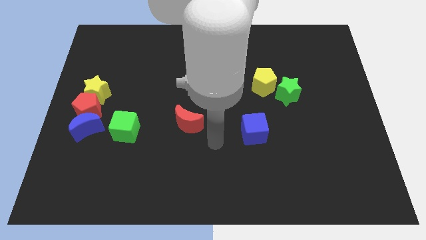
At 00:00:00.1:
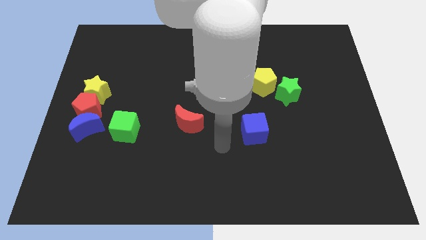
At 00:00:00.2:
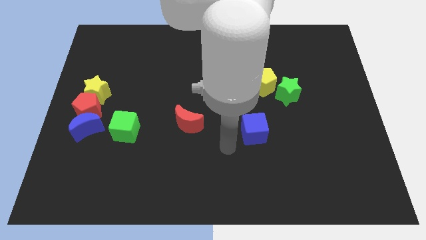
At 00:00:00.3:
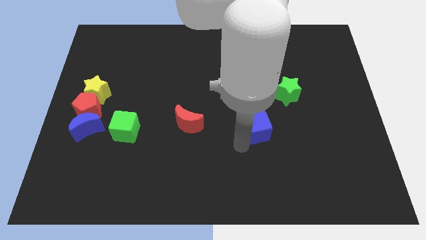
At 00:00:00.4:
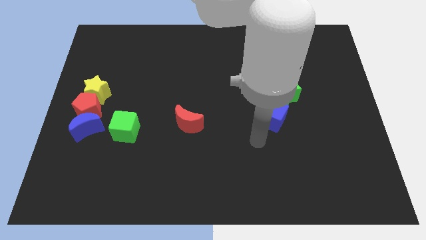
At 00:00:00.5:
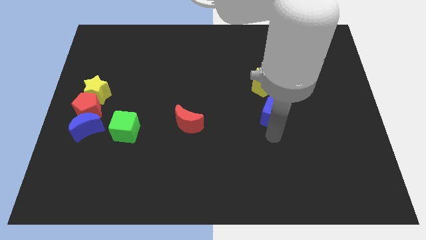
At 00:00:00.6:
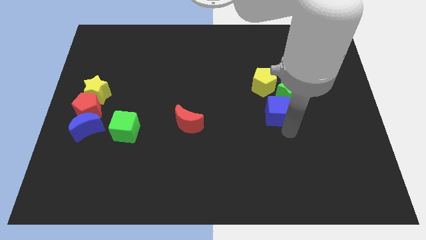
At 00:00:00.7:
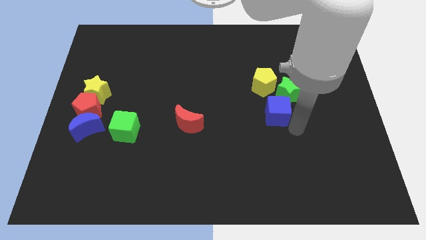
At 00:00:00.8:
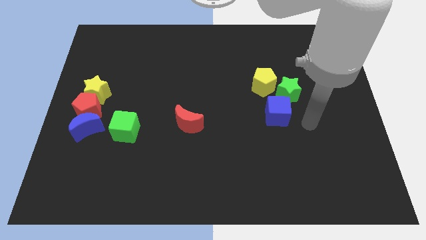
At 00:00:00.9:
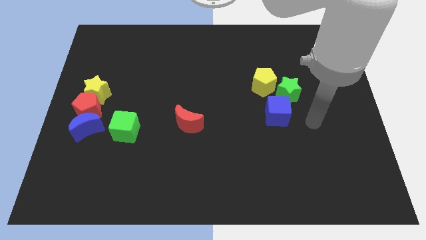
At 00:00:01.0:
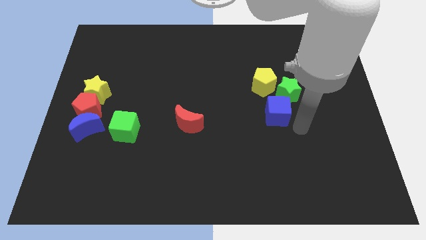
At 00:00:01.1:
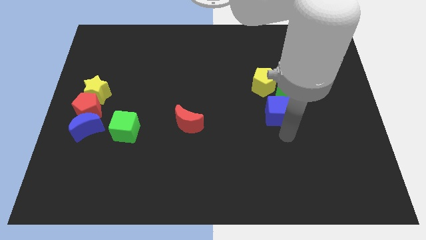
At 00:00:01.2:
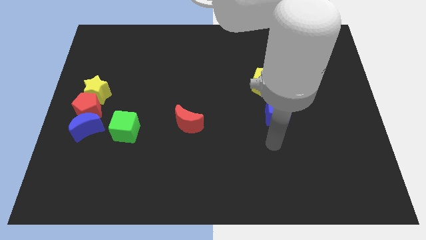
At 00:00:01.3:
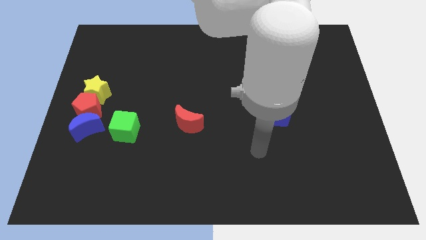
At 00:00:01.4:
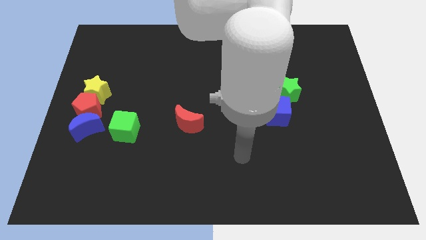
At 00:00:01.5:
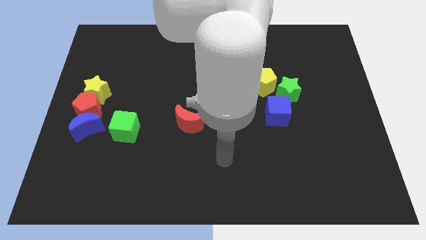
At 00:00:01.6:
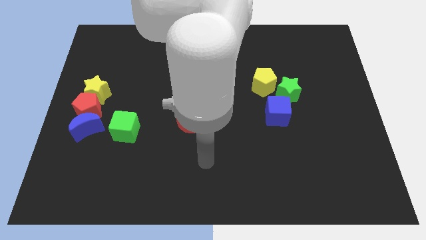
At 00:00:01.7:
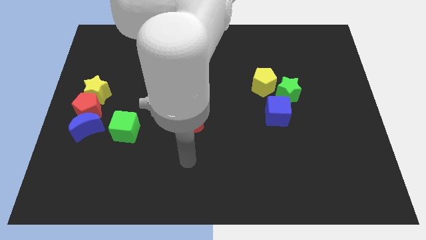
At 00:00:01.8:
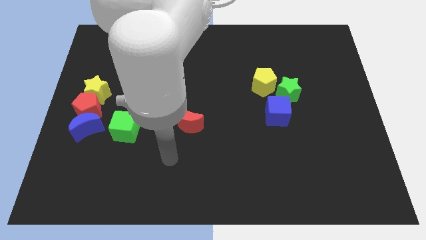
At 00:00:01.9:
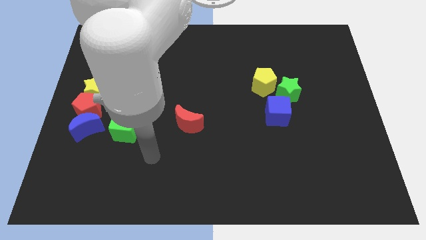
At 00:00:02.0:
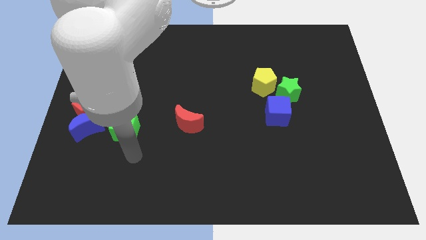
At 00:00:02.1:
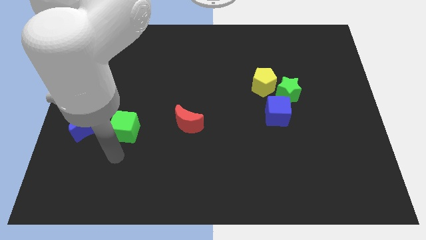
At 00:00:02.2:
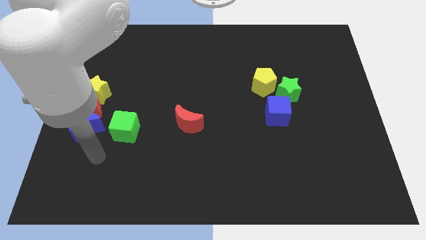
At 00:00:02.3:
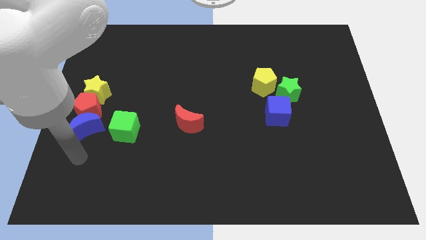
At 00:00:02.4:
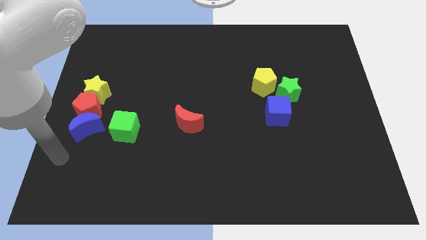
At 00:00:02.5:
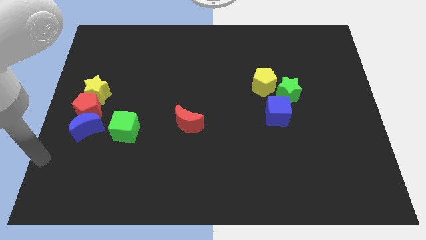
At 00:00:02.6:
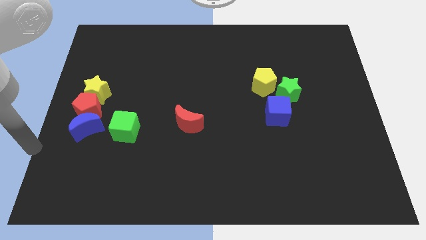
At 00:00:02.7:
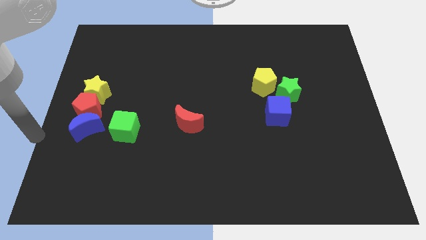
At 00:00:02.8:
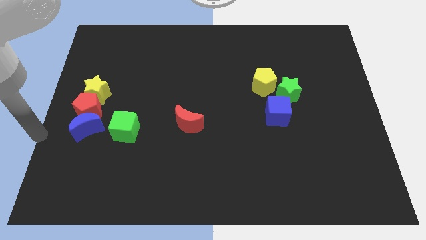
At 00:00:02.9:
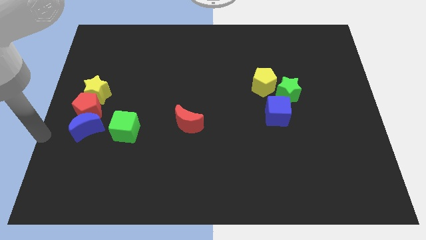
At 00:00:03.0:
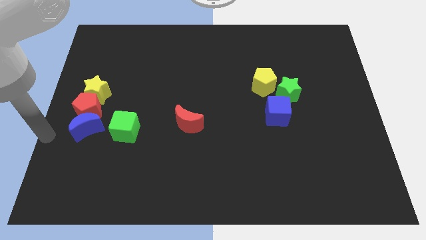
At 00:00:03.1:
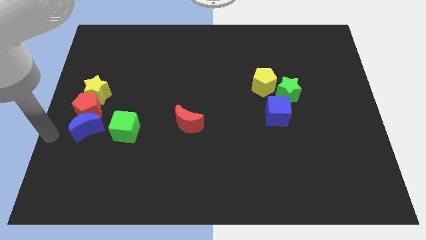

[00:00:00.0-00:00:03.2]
place the blue cube below the green star

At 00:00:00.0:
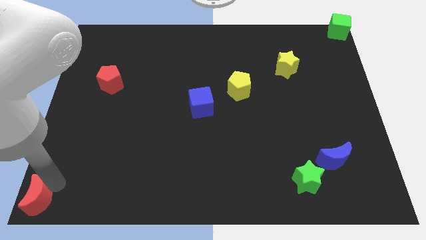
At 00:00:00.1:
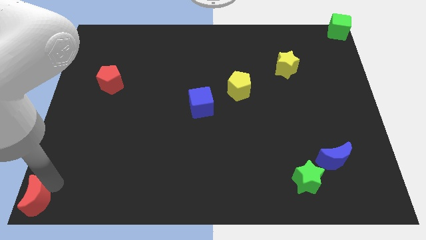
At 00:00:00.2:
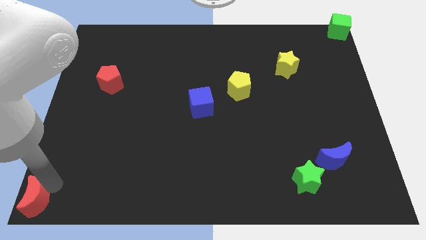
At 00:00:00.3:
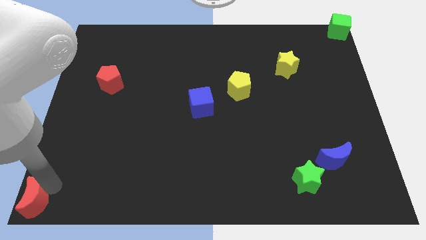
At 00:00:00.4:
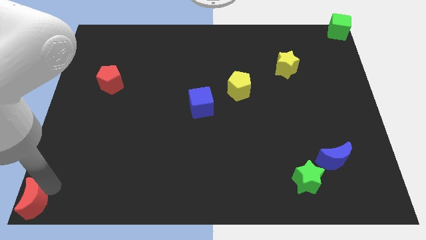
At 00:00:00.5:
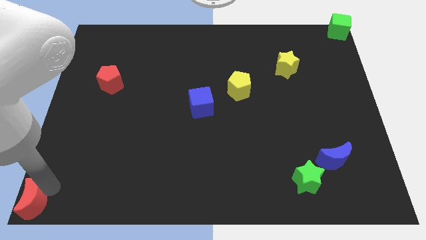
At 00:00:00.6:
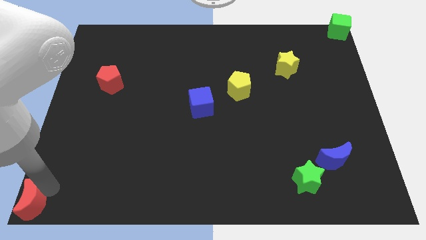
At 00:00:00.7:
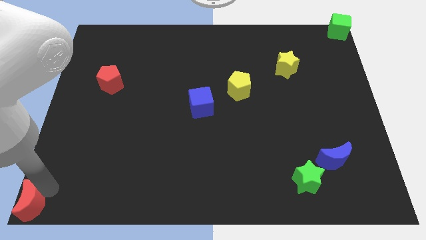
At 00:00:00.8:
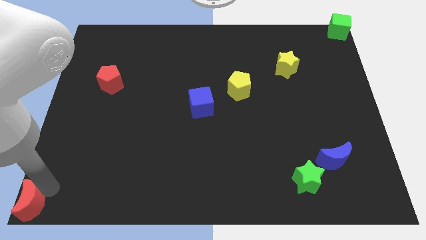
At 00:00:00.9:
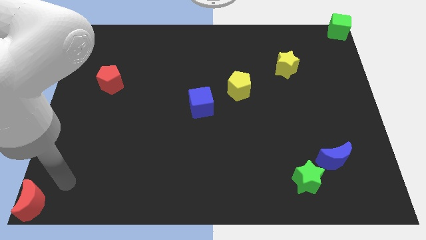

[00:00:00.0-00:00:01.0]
place the red moon to the bottom left corner of the board

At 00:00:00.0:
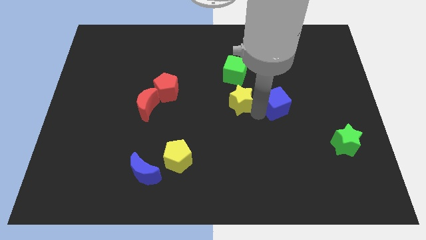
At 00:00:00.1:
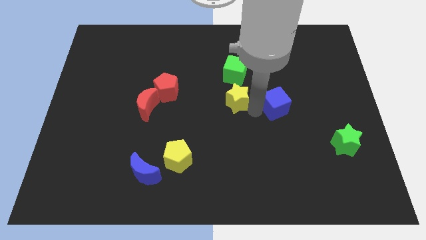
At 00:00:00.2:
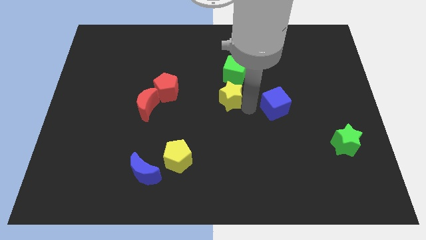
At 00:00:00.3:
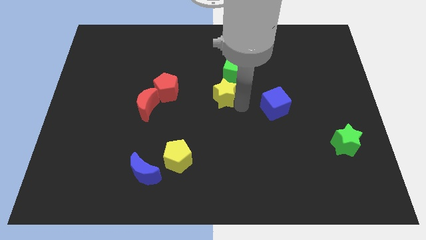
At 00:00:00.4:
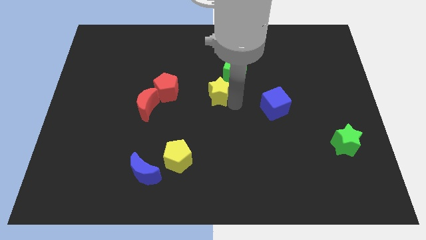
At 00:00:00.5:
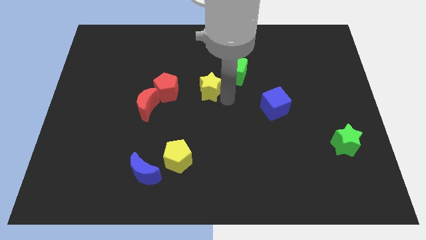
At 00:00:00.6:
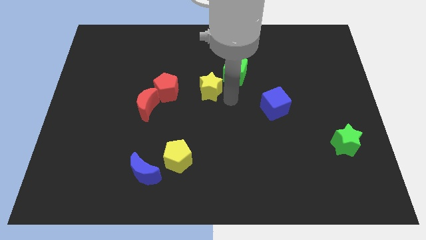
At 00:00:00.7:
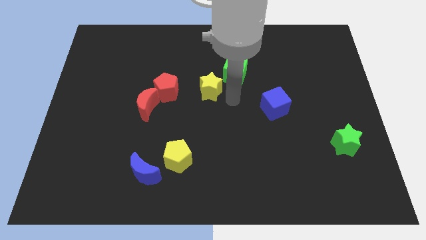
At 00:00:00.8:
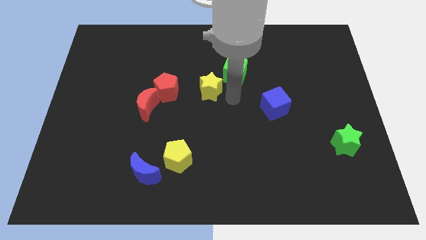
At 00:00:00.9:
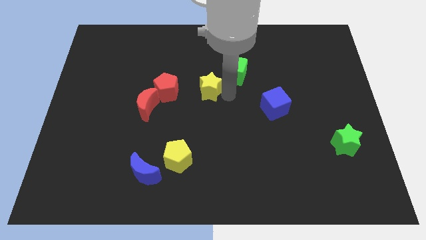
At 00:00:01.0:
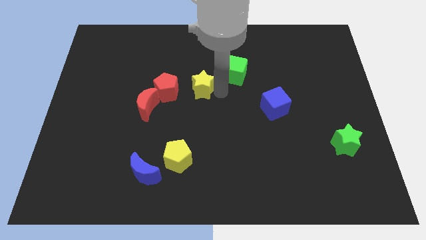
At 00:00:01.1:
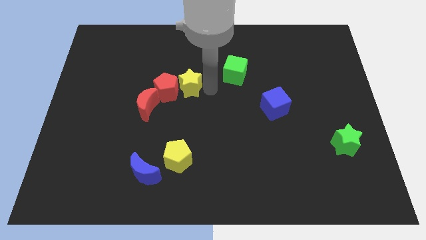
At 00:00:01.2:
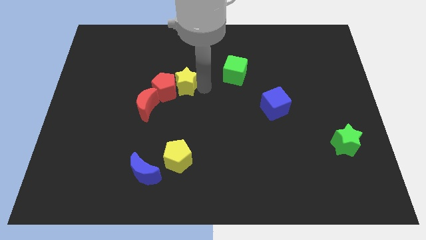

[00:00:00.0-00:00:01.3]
place the yellow star at the right side of the red pentagon

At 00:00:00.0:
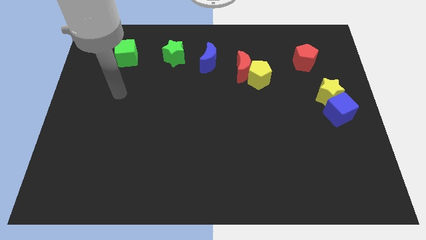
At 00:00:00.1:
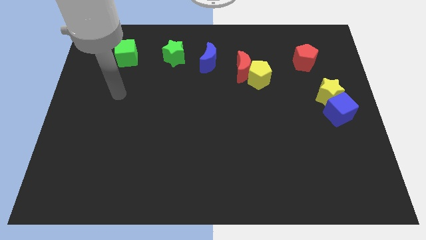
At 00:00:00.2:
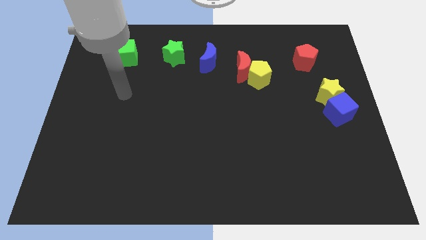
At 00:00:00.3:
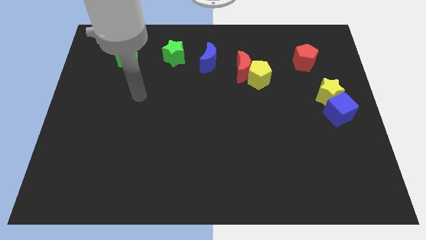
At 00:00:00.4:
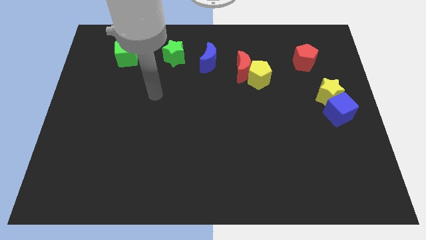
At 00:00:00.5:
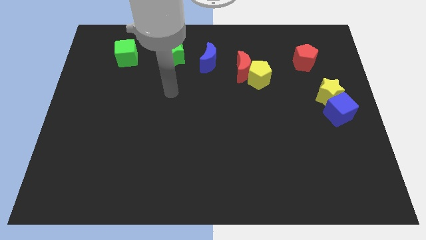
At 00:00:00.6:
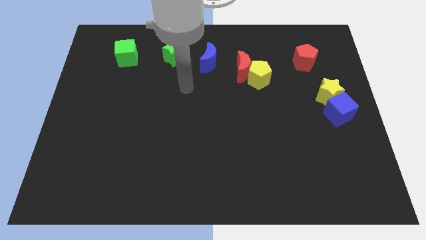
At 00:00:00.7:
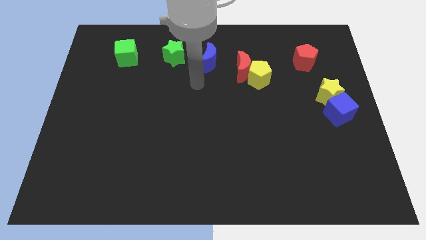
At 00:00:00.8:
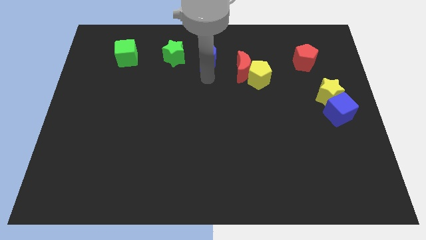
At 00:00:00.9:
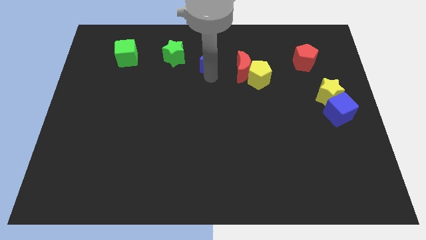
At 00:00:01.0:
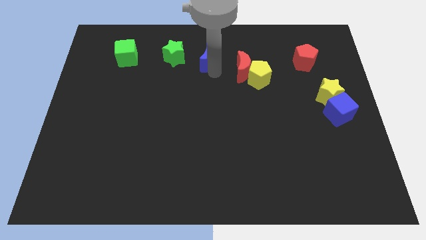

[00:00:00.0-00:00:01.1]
point the arm at the bottom of the blue moon

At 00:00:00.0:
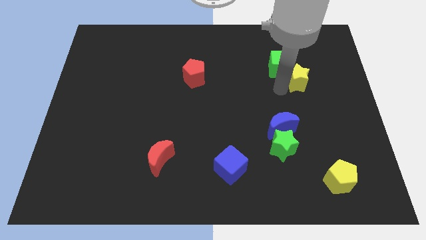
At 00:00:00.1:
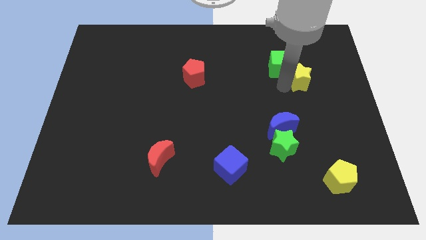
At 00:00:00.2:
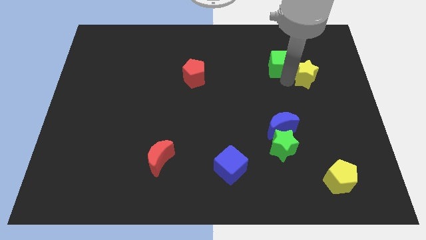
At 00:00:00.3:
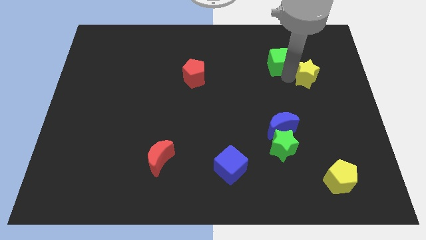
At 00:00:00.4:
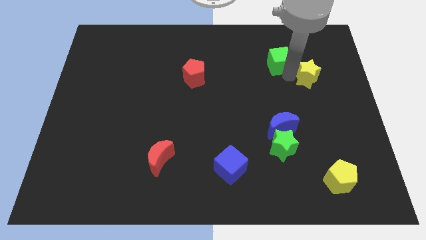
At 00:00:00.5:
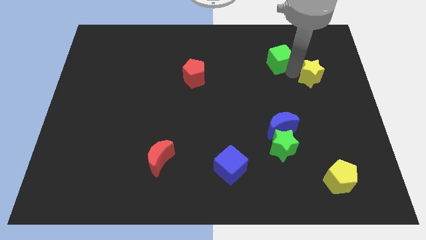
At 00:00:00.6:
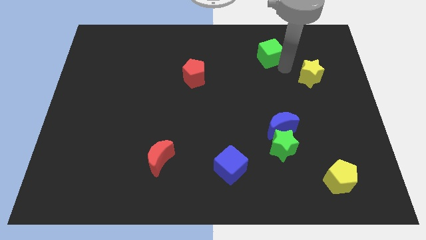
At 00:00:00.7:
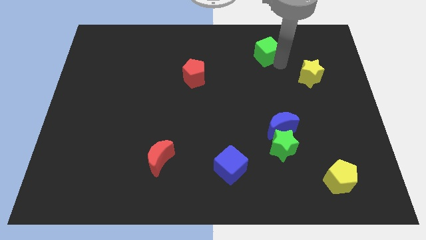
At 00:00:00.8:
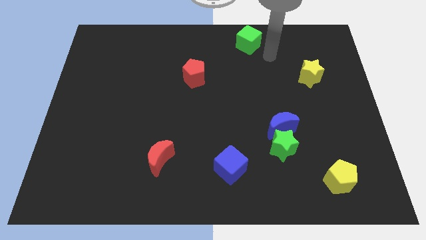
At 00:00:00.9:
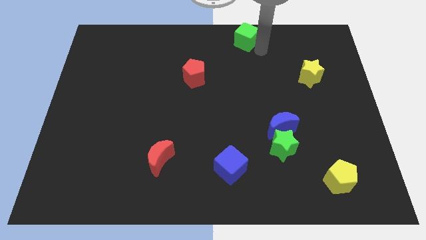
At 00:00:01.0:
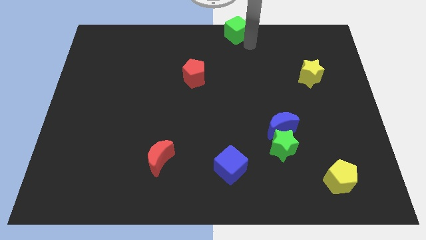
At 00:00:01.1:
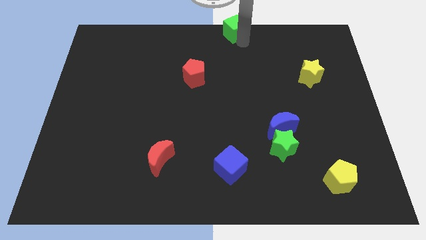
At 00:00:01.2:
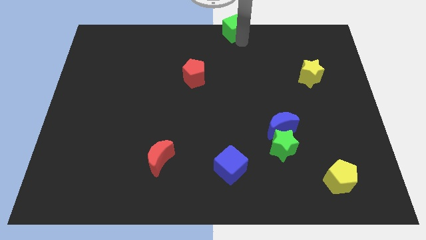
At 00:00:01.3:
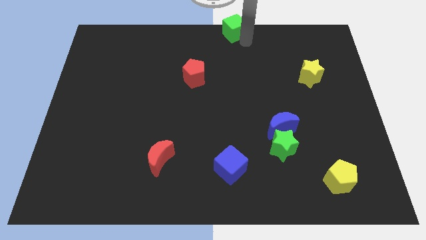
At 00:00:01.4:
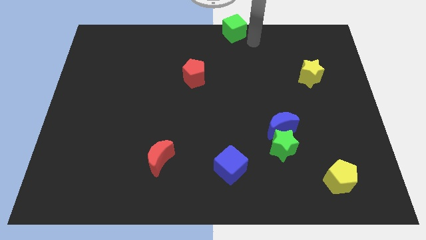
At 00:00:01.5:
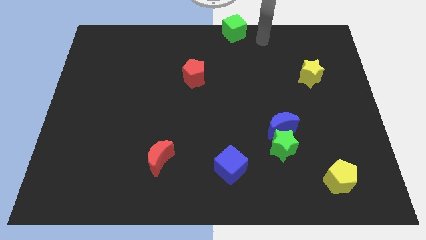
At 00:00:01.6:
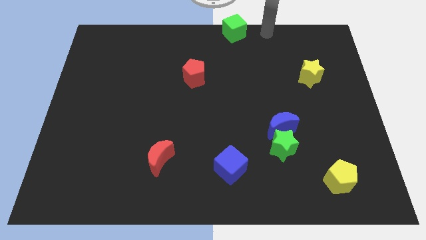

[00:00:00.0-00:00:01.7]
push the green cube to the top center

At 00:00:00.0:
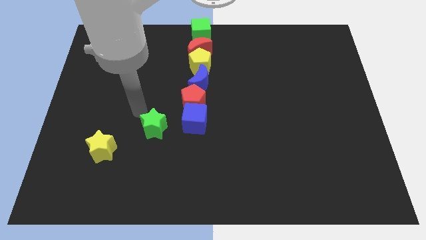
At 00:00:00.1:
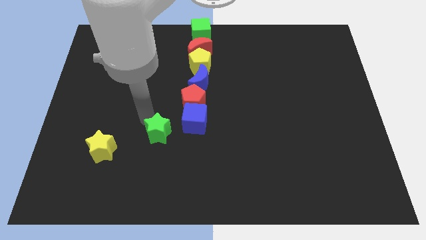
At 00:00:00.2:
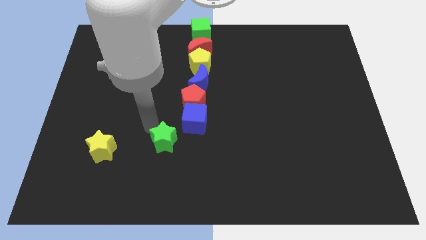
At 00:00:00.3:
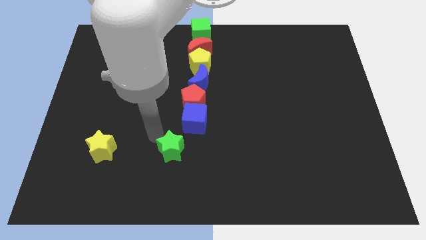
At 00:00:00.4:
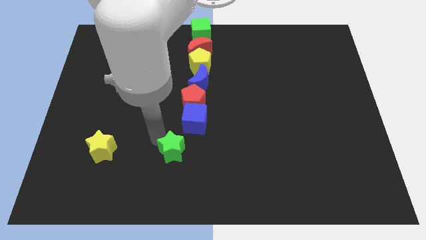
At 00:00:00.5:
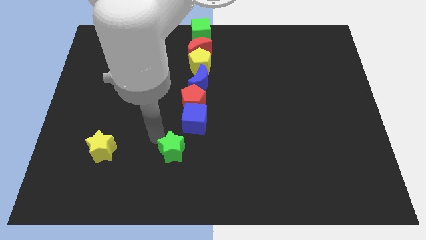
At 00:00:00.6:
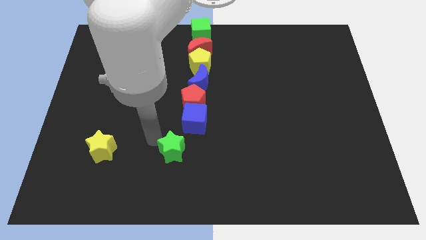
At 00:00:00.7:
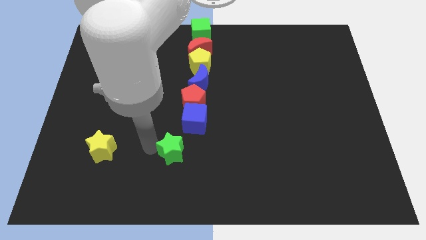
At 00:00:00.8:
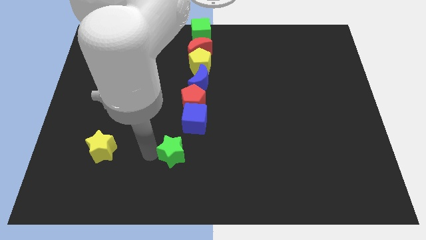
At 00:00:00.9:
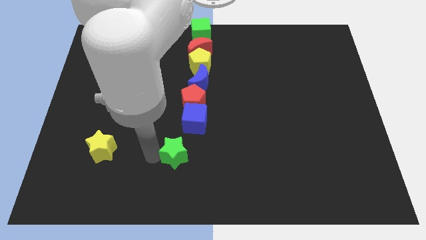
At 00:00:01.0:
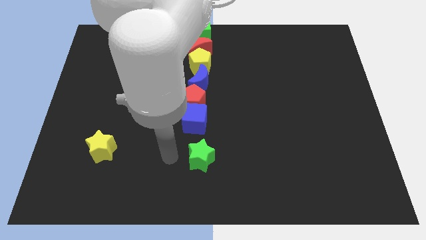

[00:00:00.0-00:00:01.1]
place the green star to the bottom of the blue cube
